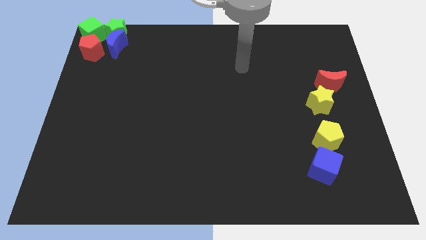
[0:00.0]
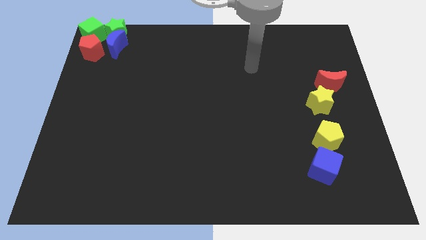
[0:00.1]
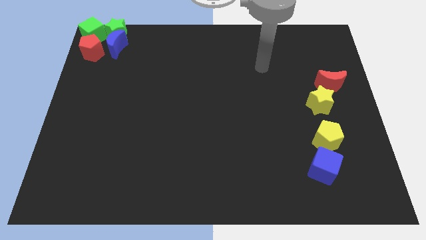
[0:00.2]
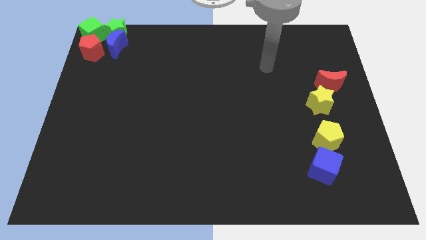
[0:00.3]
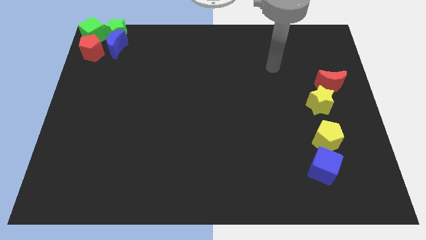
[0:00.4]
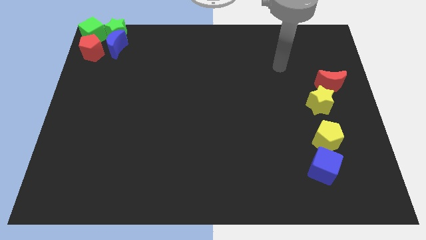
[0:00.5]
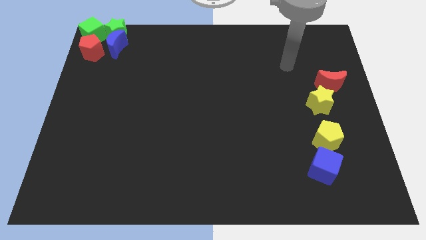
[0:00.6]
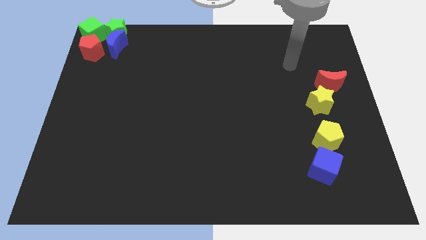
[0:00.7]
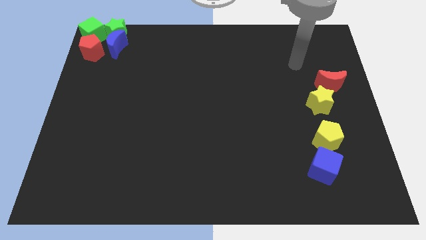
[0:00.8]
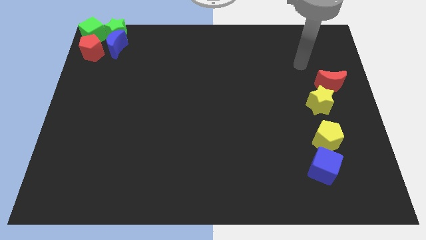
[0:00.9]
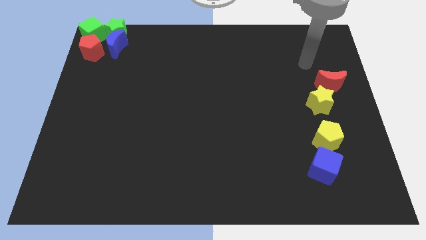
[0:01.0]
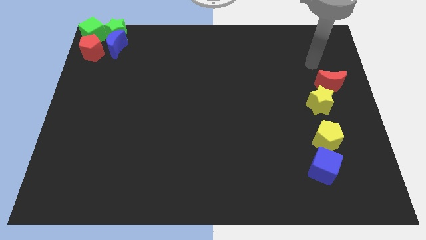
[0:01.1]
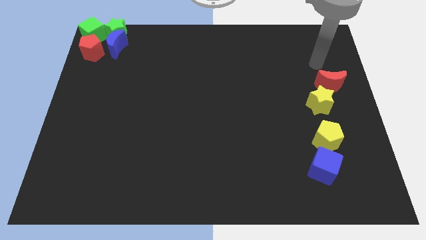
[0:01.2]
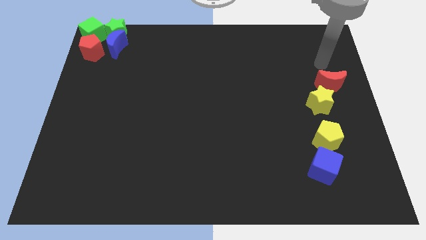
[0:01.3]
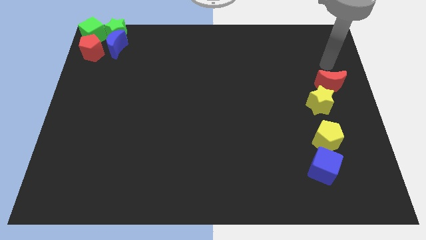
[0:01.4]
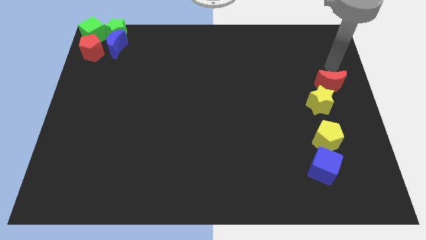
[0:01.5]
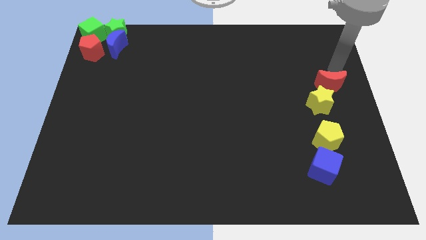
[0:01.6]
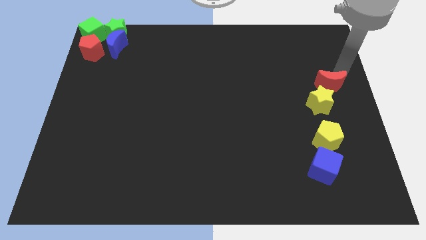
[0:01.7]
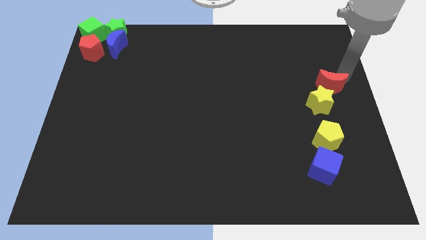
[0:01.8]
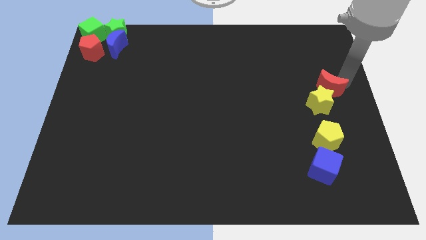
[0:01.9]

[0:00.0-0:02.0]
touch the red crescent with your arm

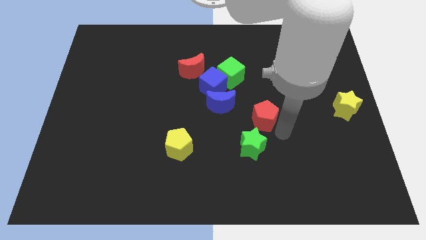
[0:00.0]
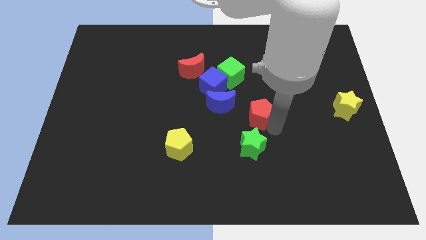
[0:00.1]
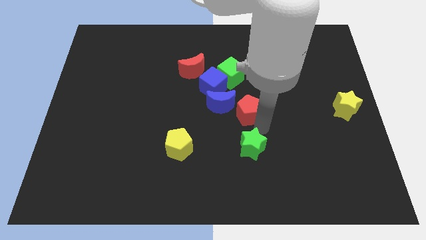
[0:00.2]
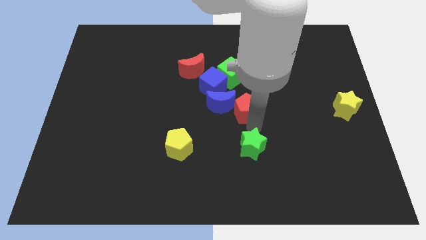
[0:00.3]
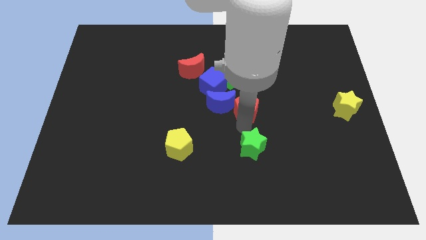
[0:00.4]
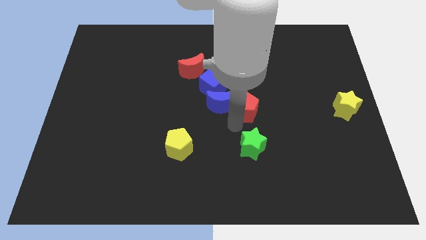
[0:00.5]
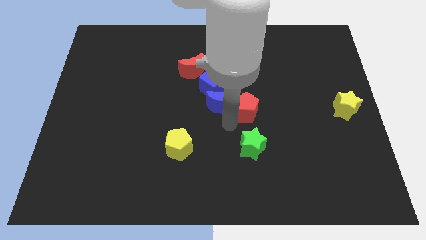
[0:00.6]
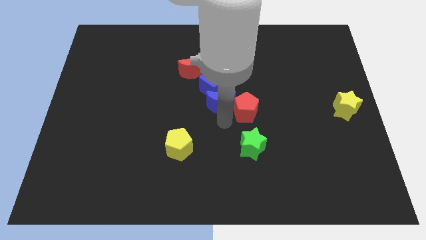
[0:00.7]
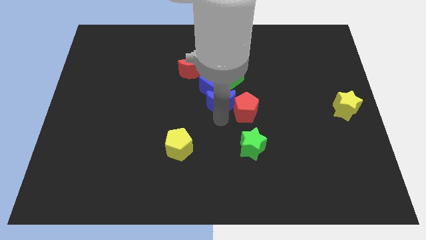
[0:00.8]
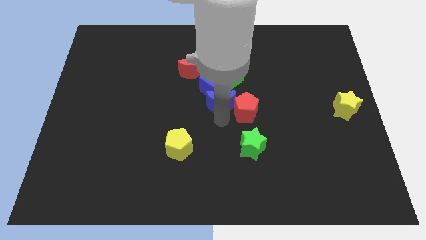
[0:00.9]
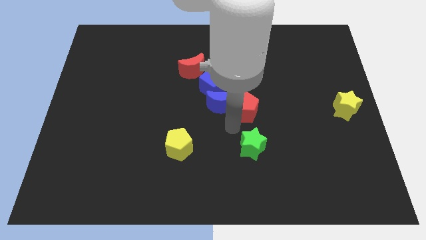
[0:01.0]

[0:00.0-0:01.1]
place the red pentagon to the right of the blue crescent

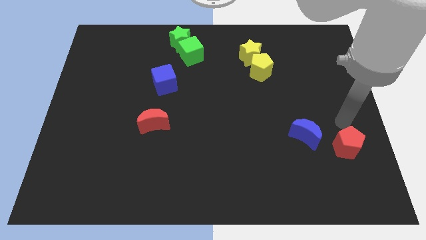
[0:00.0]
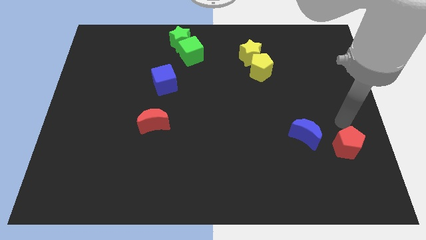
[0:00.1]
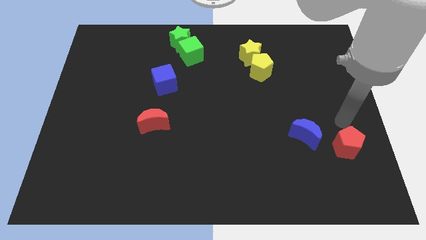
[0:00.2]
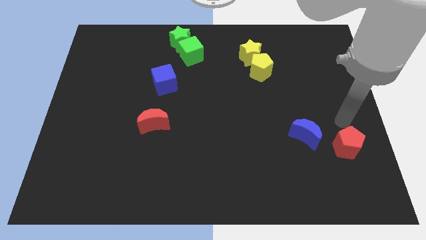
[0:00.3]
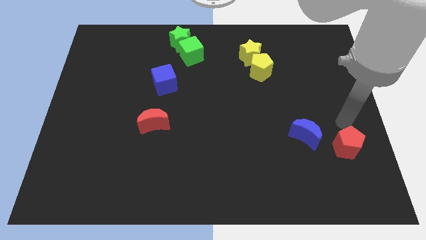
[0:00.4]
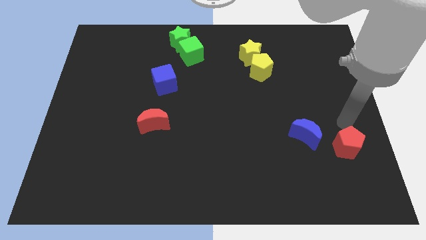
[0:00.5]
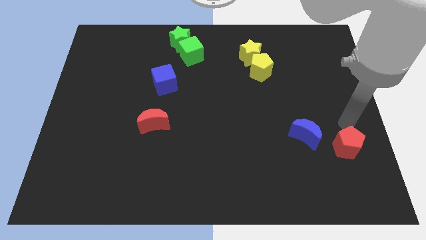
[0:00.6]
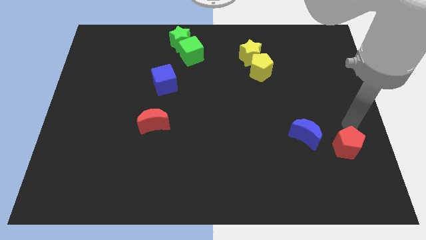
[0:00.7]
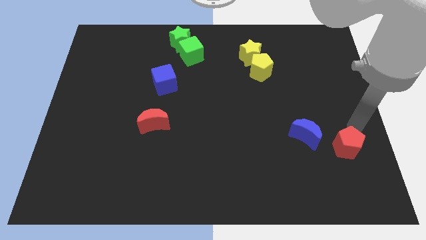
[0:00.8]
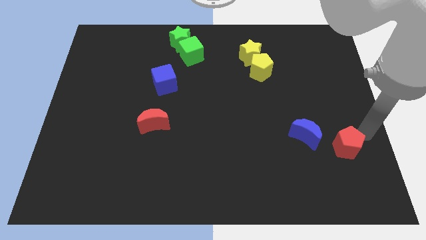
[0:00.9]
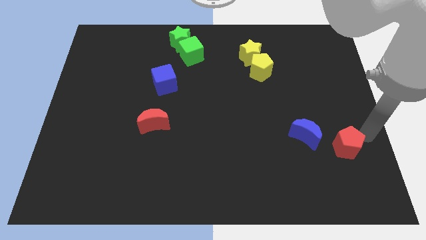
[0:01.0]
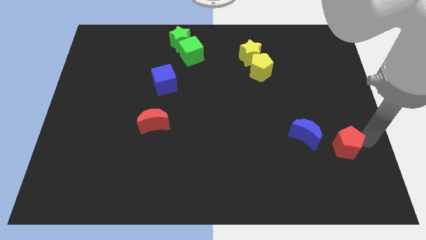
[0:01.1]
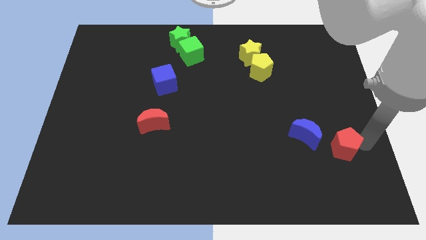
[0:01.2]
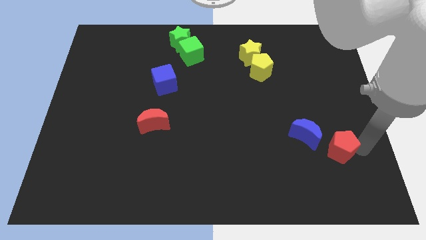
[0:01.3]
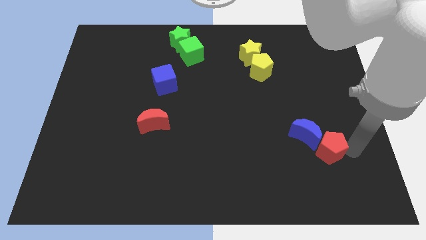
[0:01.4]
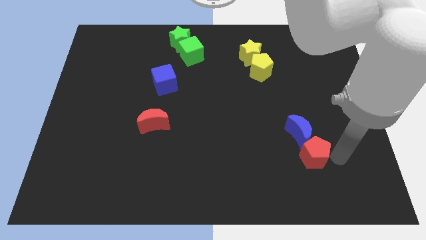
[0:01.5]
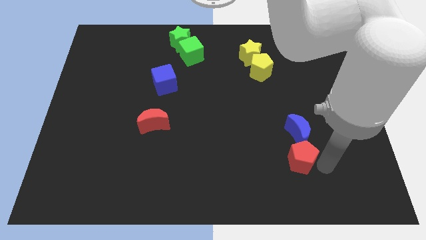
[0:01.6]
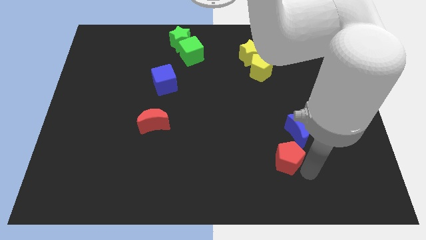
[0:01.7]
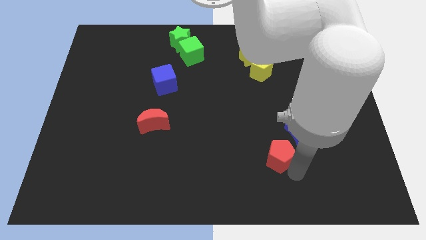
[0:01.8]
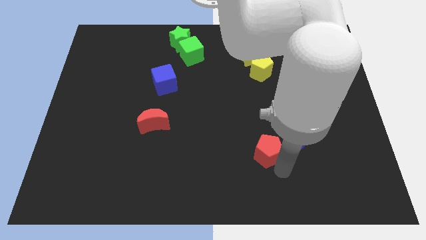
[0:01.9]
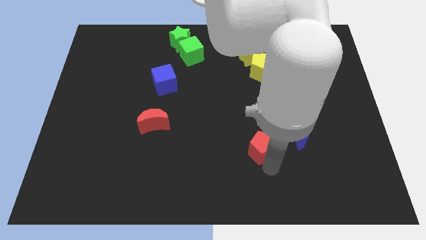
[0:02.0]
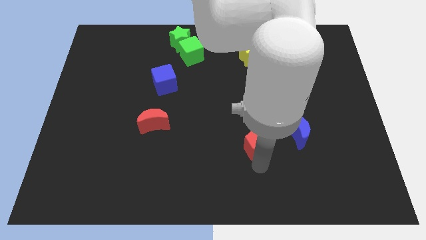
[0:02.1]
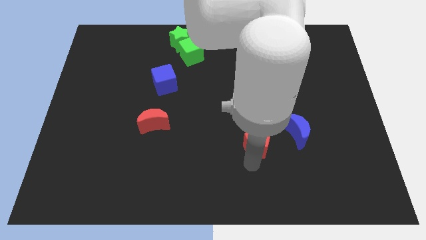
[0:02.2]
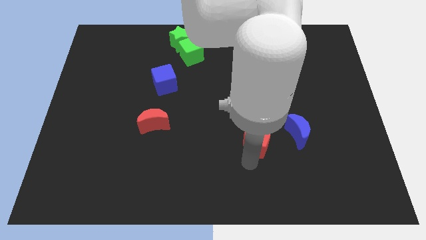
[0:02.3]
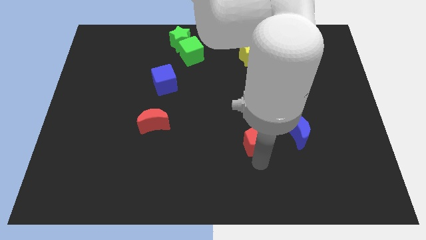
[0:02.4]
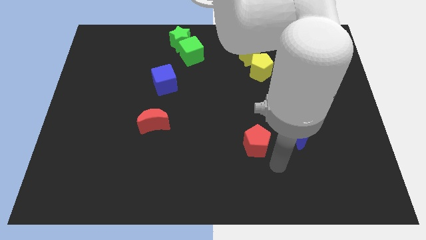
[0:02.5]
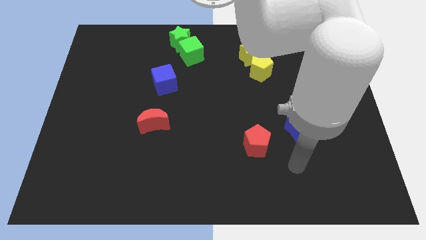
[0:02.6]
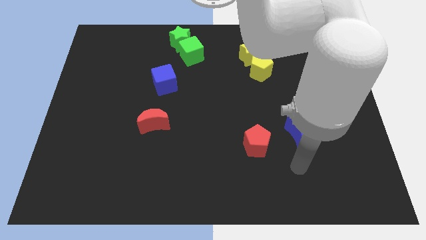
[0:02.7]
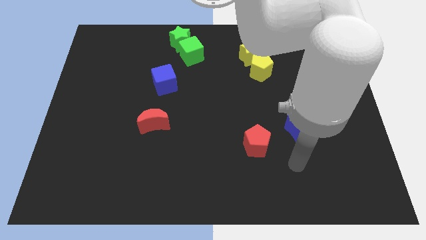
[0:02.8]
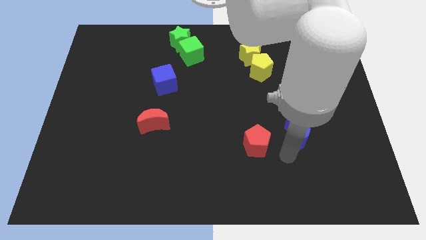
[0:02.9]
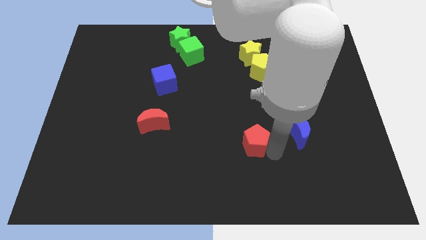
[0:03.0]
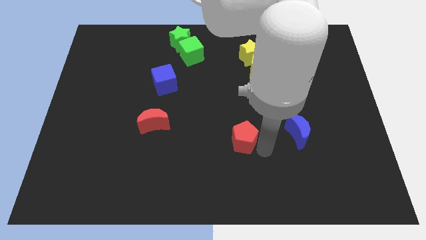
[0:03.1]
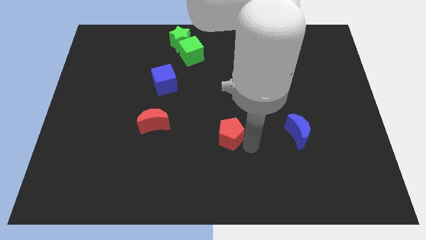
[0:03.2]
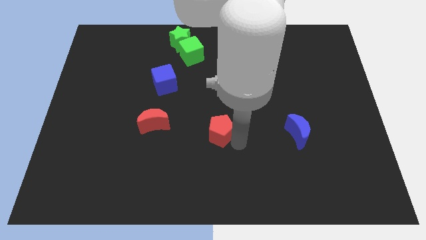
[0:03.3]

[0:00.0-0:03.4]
move the red pentagon in between the blue crescent and the red moon

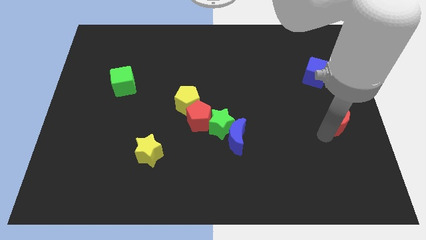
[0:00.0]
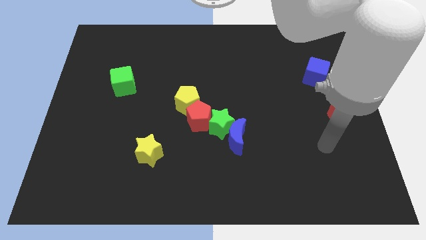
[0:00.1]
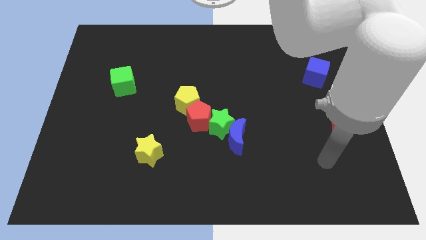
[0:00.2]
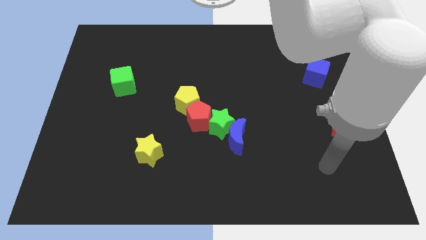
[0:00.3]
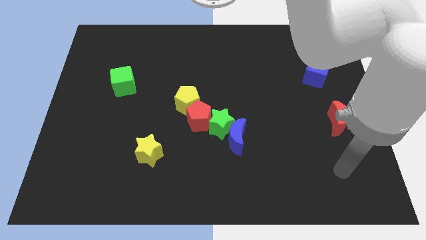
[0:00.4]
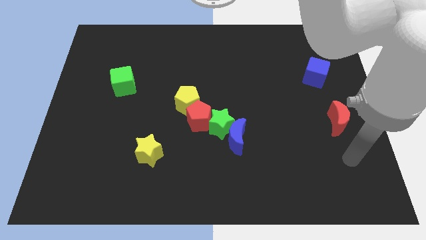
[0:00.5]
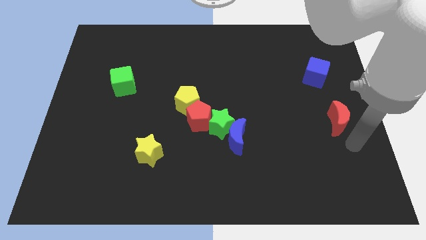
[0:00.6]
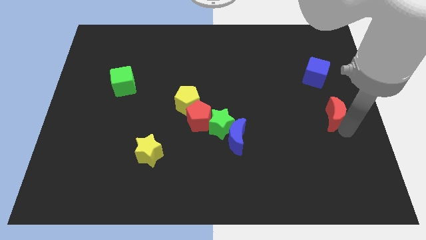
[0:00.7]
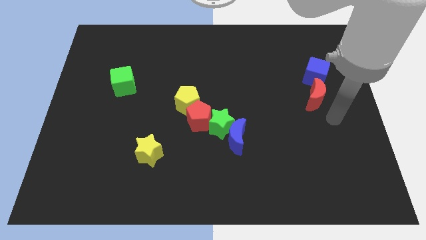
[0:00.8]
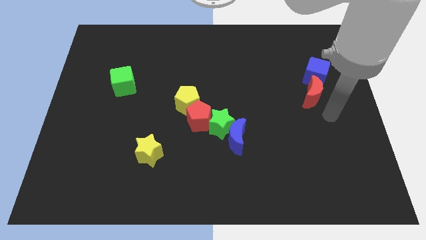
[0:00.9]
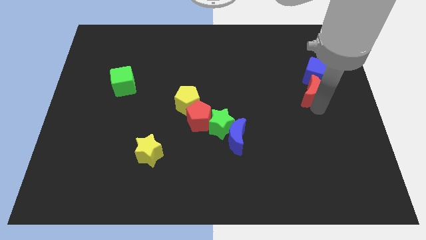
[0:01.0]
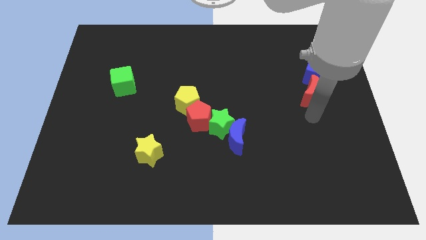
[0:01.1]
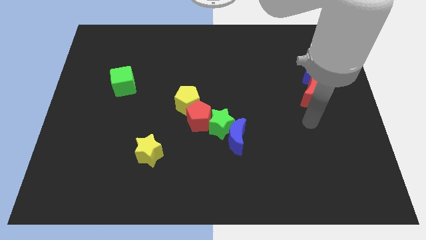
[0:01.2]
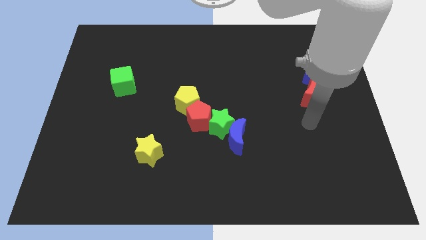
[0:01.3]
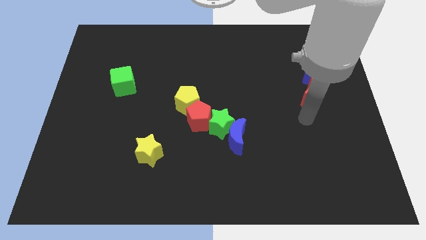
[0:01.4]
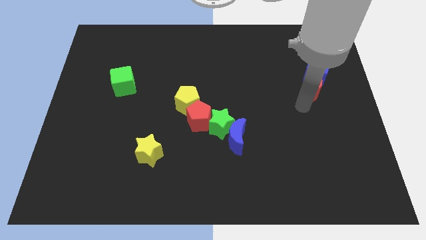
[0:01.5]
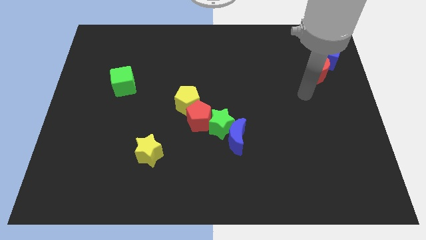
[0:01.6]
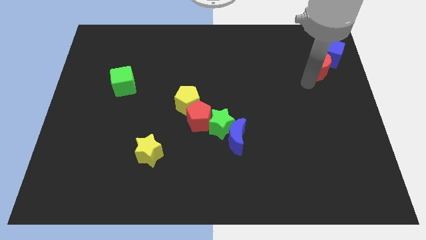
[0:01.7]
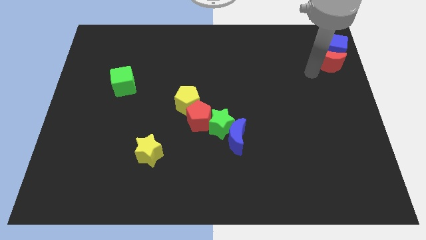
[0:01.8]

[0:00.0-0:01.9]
push the red moon into blue cube

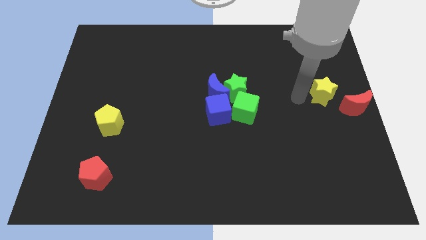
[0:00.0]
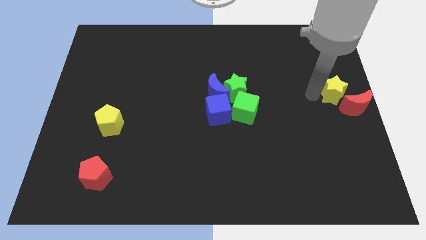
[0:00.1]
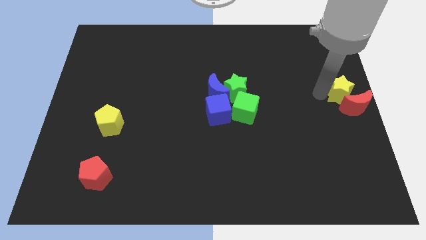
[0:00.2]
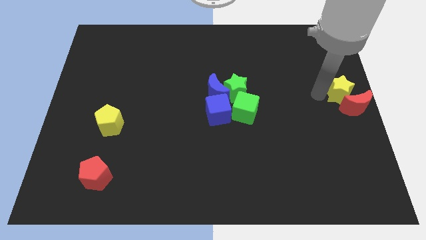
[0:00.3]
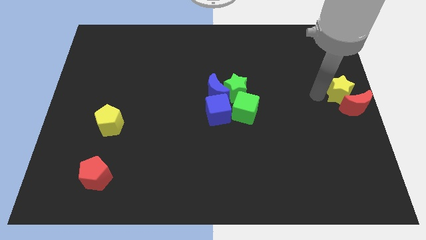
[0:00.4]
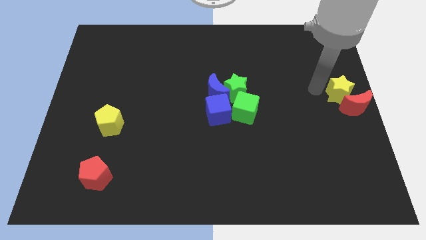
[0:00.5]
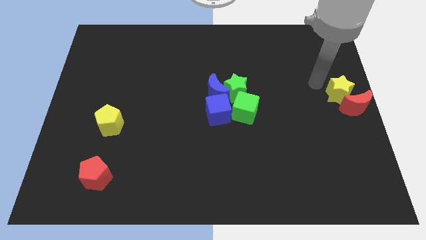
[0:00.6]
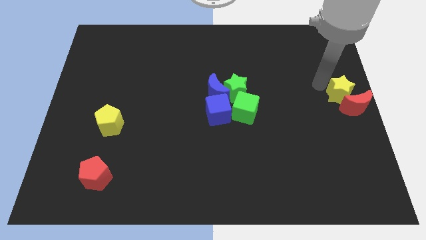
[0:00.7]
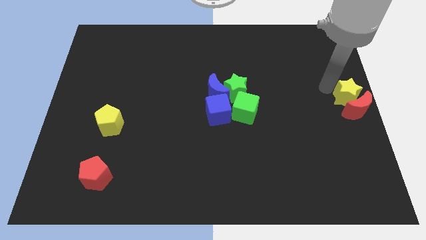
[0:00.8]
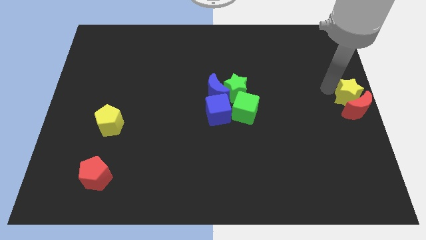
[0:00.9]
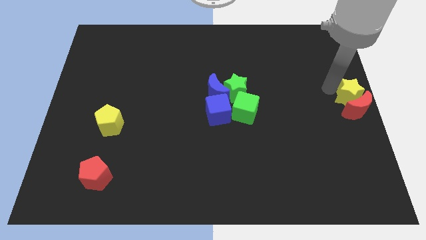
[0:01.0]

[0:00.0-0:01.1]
move the yellow star to the top of red crescent
